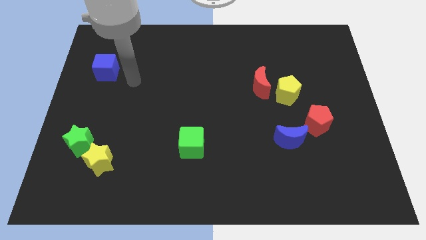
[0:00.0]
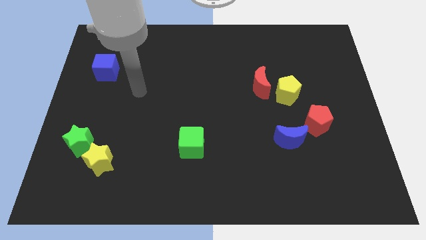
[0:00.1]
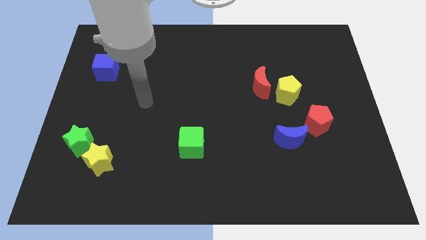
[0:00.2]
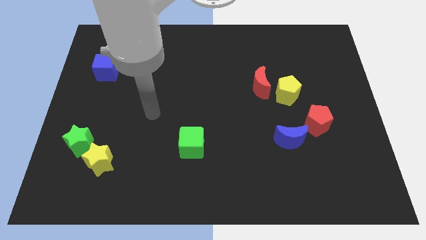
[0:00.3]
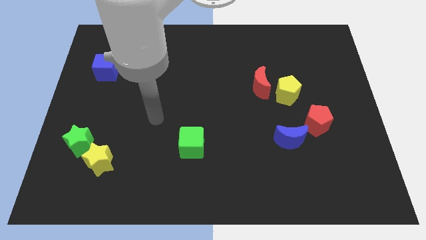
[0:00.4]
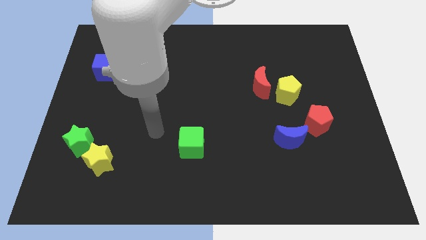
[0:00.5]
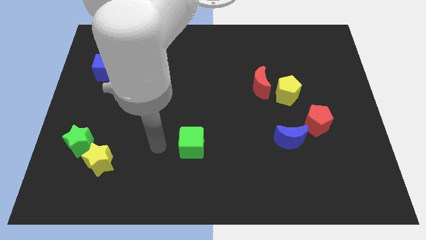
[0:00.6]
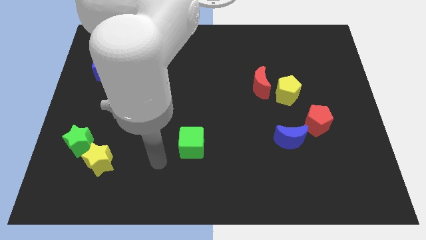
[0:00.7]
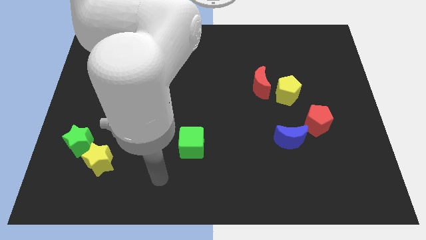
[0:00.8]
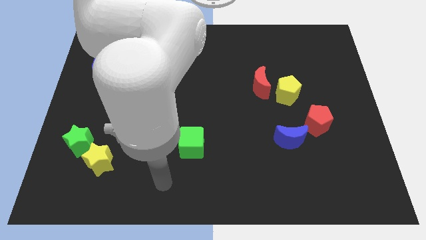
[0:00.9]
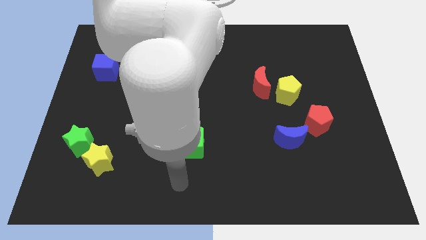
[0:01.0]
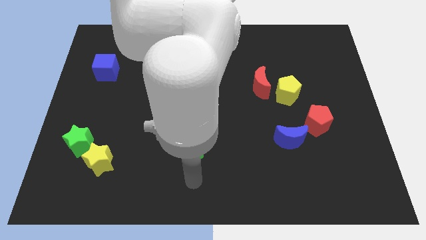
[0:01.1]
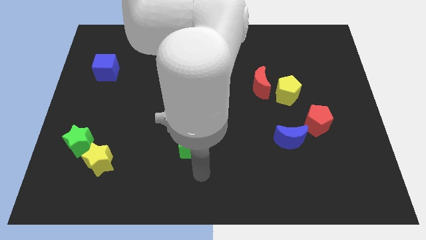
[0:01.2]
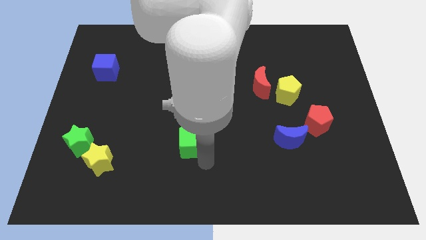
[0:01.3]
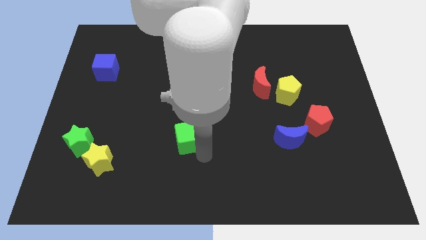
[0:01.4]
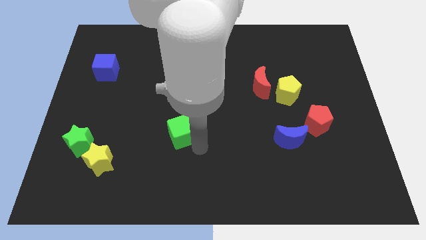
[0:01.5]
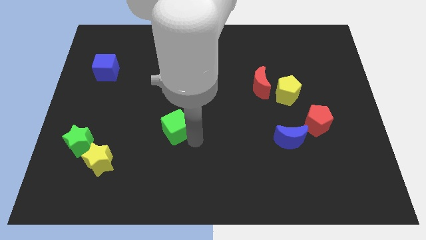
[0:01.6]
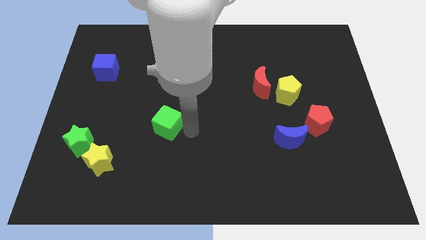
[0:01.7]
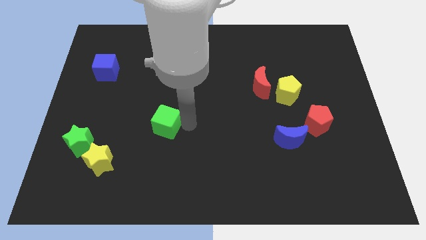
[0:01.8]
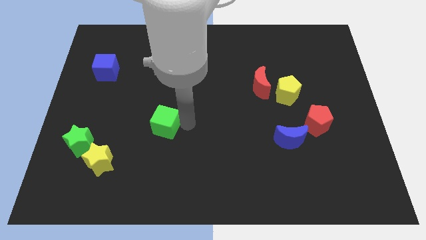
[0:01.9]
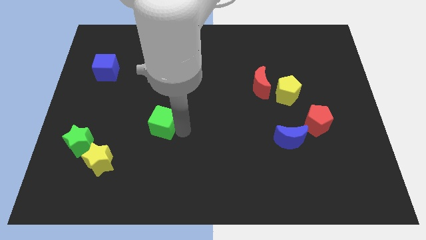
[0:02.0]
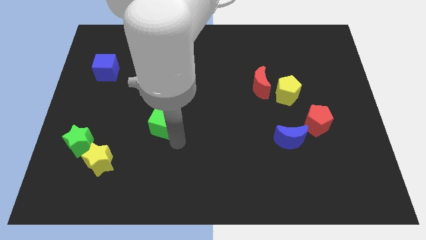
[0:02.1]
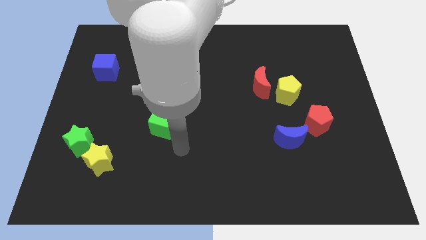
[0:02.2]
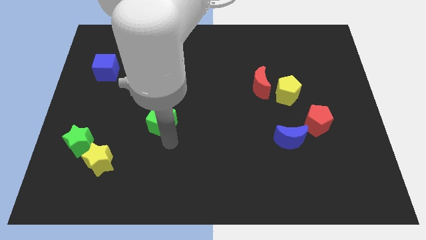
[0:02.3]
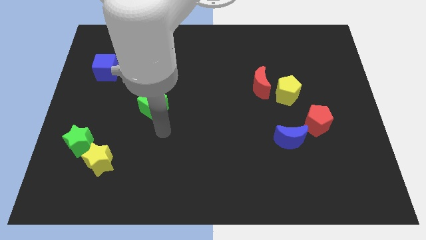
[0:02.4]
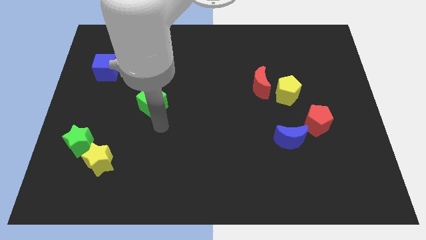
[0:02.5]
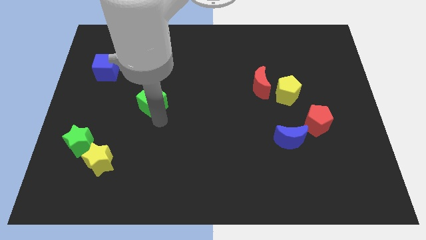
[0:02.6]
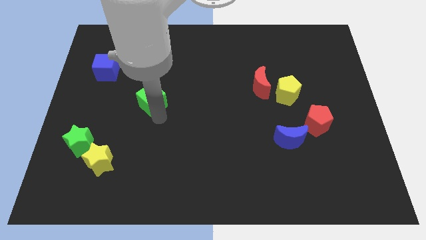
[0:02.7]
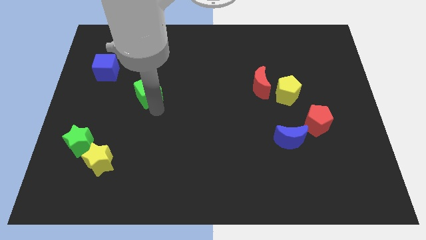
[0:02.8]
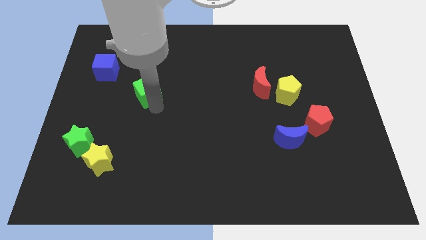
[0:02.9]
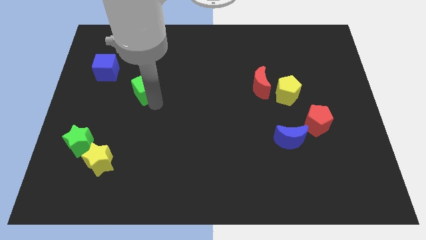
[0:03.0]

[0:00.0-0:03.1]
place the green cube right to the green star

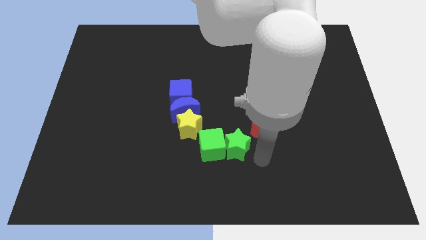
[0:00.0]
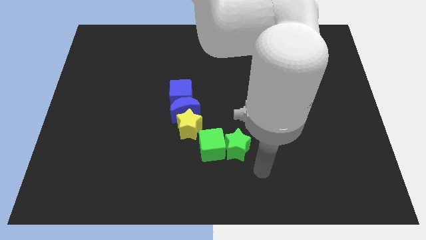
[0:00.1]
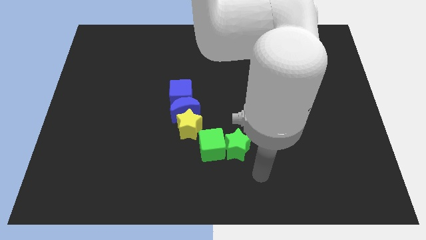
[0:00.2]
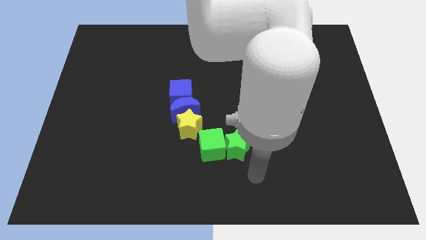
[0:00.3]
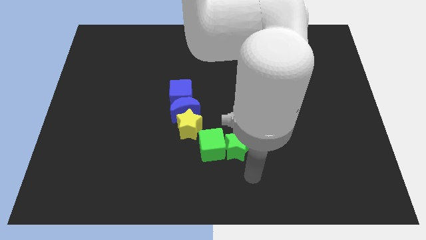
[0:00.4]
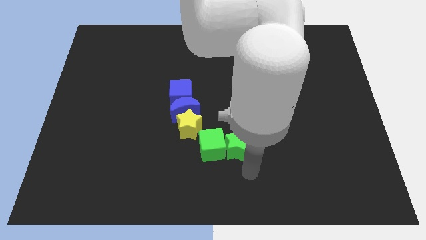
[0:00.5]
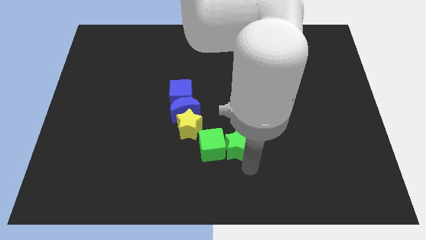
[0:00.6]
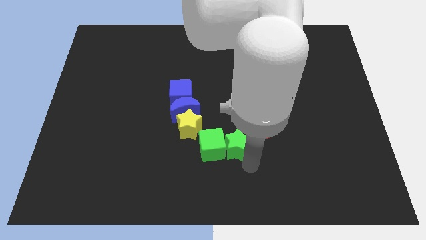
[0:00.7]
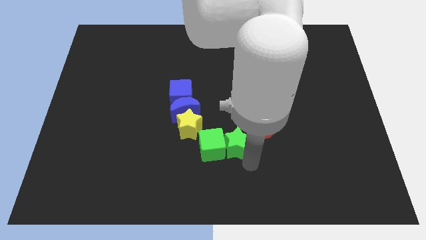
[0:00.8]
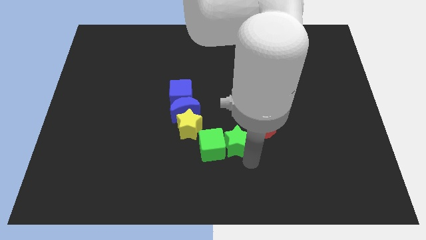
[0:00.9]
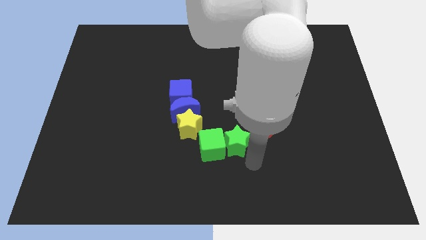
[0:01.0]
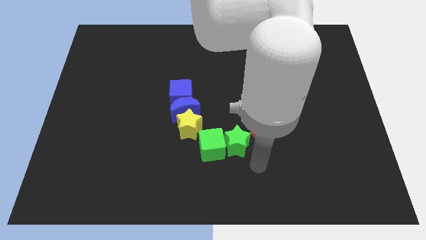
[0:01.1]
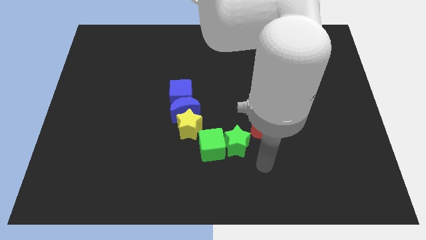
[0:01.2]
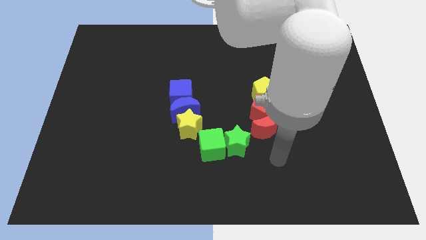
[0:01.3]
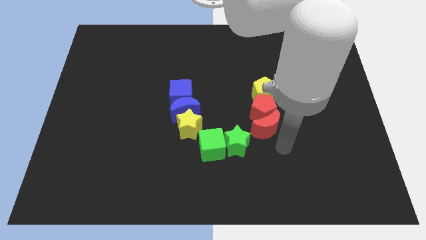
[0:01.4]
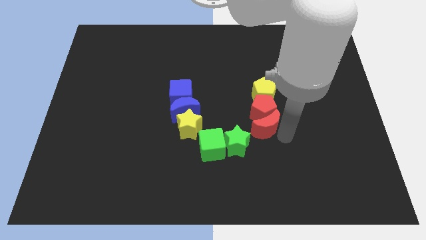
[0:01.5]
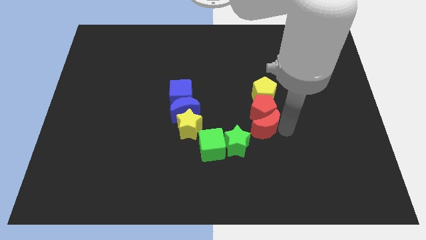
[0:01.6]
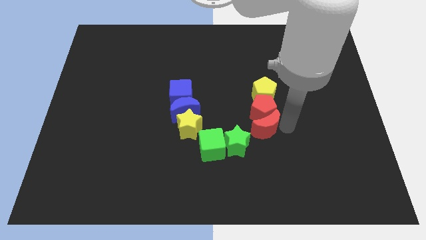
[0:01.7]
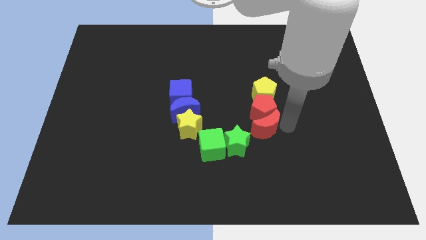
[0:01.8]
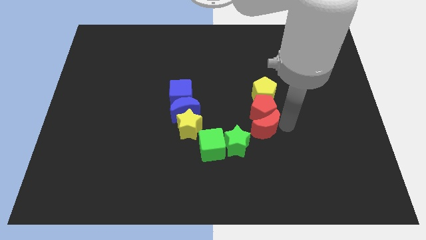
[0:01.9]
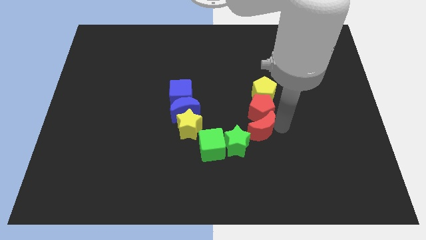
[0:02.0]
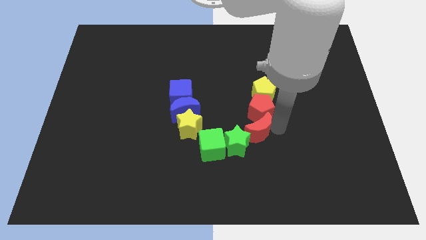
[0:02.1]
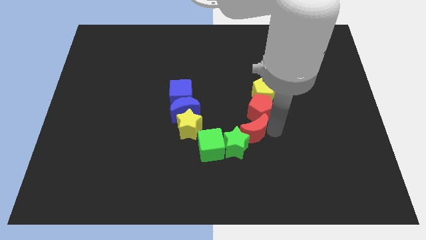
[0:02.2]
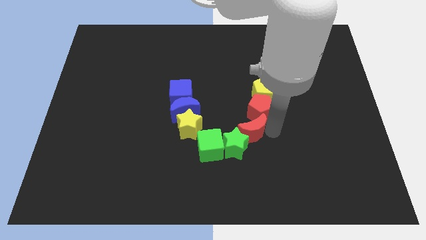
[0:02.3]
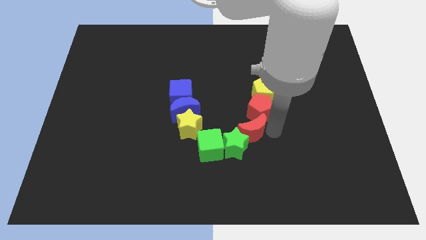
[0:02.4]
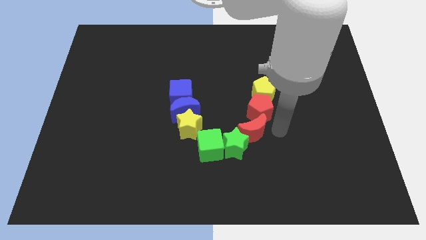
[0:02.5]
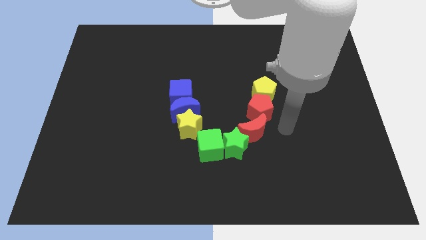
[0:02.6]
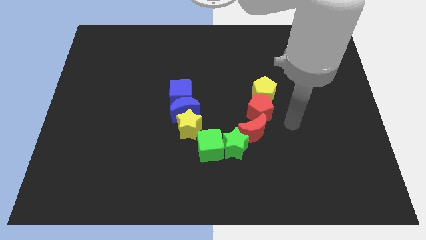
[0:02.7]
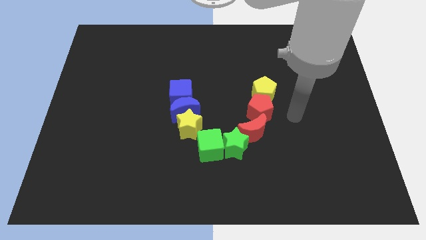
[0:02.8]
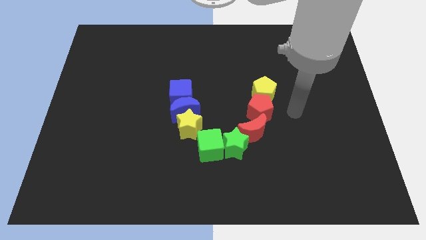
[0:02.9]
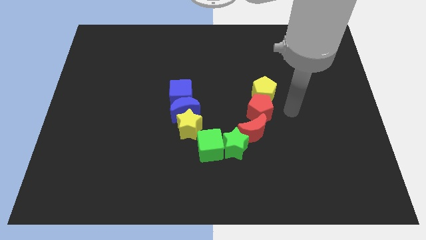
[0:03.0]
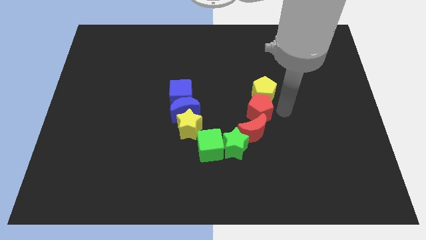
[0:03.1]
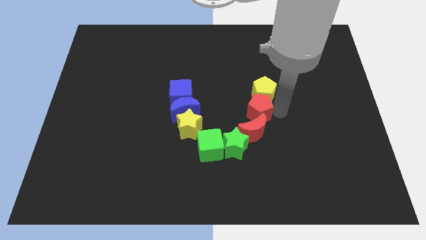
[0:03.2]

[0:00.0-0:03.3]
adjust the red moon on the top right side of the green star

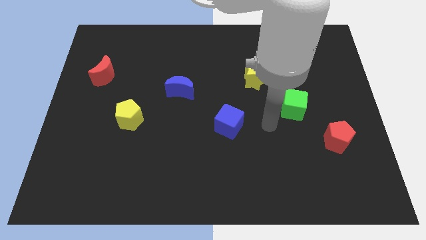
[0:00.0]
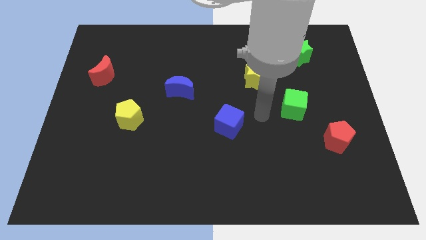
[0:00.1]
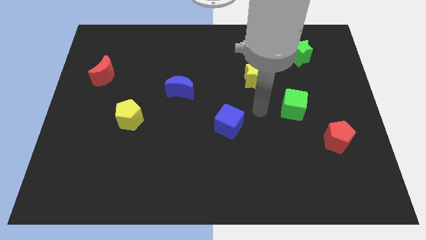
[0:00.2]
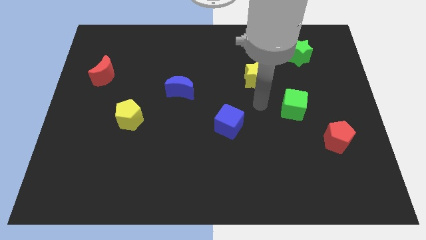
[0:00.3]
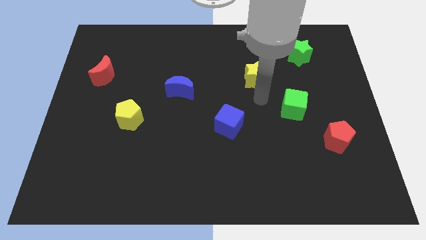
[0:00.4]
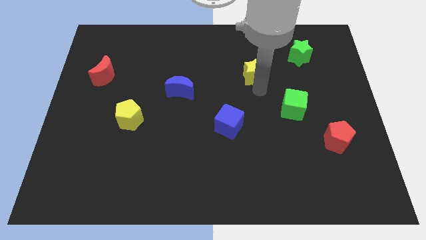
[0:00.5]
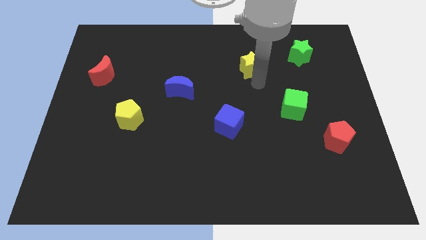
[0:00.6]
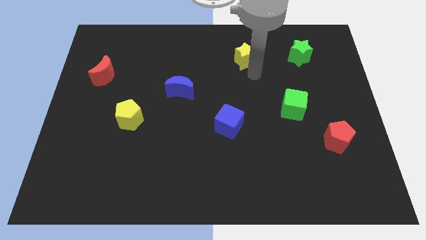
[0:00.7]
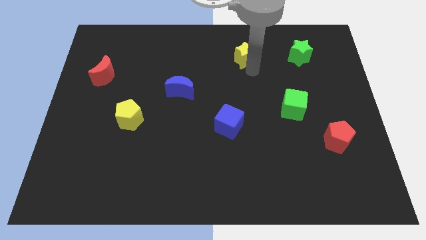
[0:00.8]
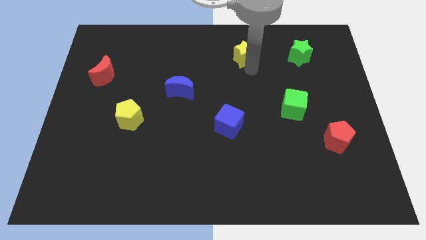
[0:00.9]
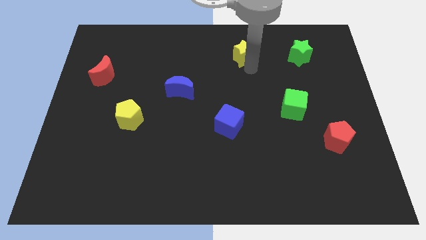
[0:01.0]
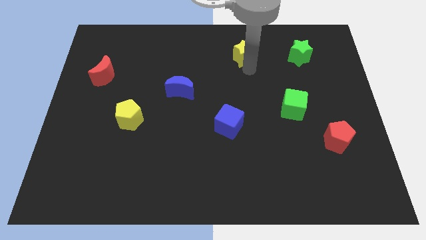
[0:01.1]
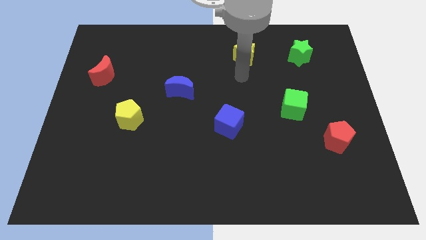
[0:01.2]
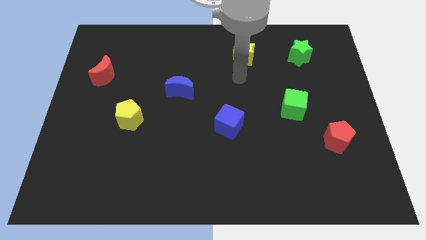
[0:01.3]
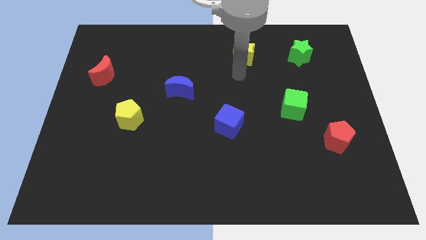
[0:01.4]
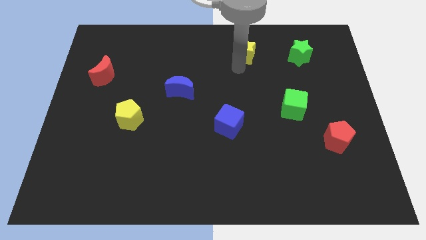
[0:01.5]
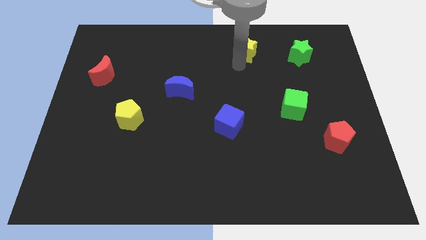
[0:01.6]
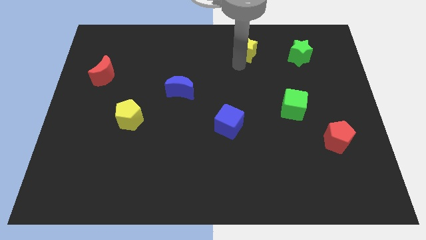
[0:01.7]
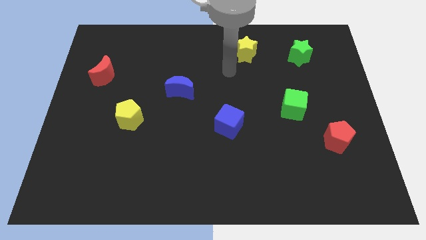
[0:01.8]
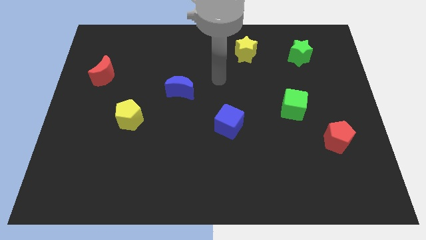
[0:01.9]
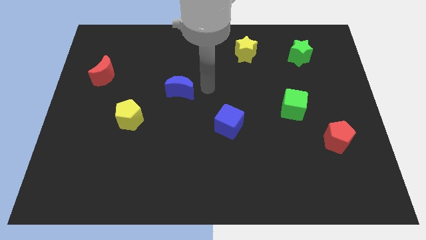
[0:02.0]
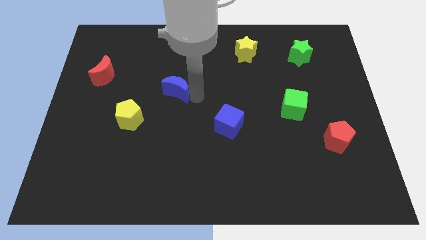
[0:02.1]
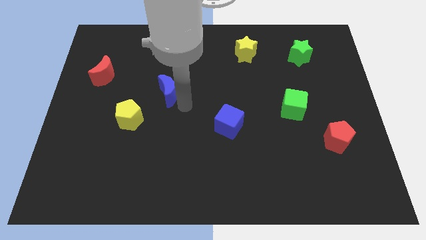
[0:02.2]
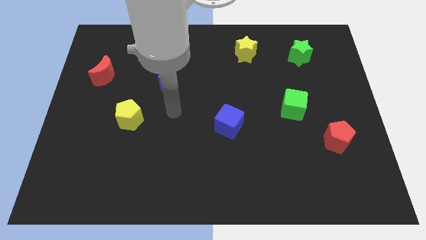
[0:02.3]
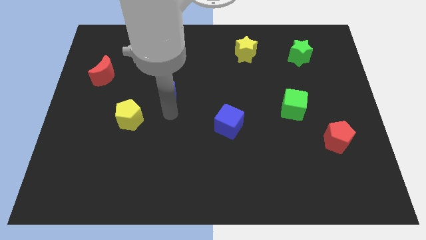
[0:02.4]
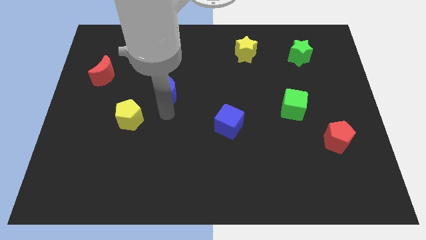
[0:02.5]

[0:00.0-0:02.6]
move the yellow star paralle to green star
